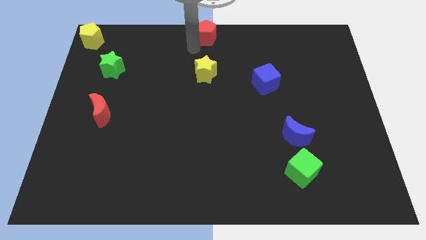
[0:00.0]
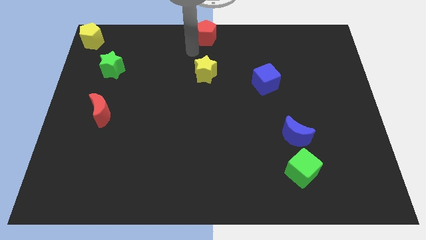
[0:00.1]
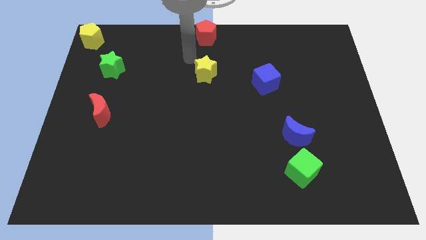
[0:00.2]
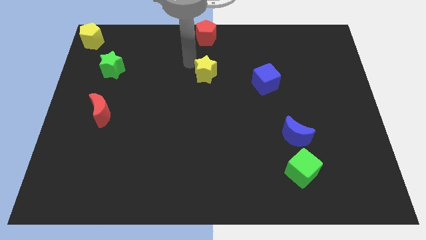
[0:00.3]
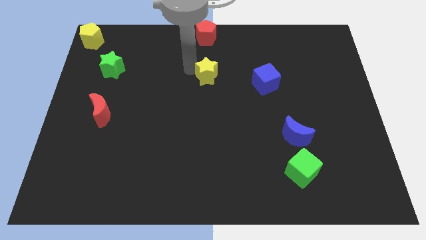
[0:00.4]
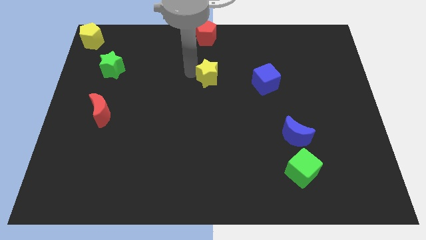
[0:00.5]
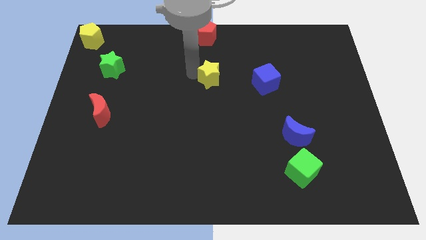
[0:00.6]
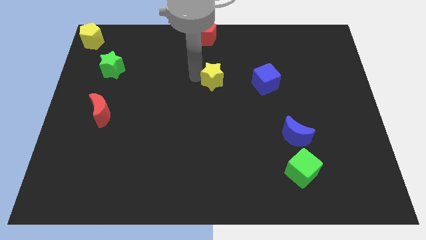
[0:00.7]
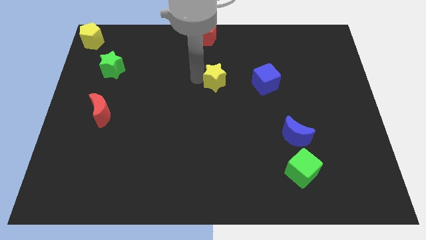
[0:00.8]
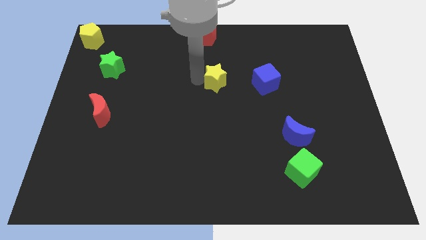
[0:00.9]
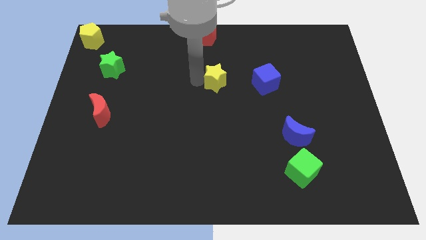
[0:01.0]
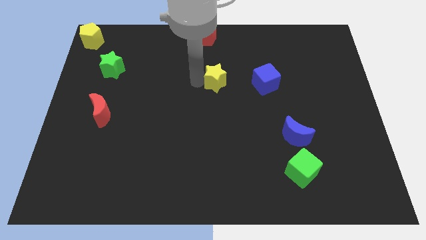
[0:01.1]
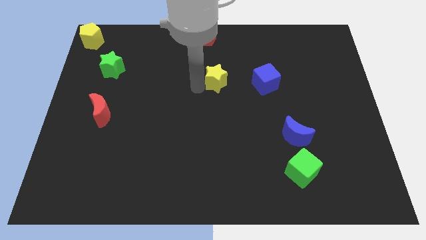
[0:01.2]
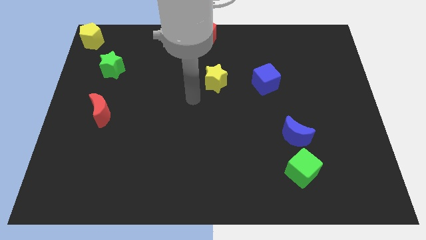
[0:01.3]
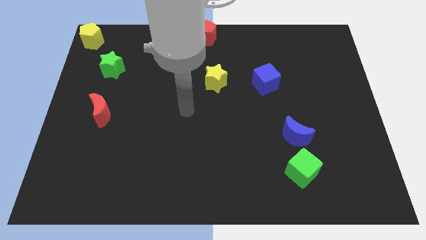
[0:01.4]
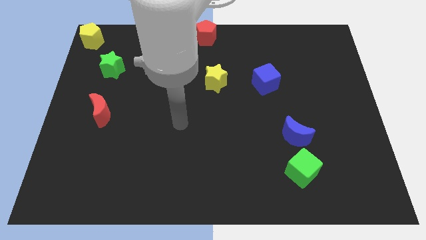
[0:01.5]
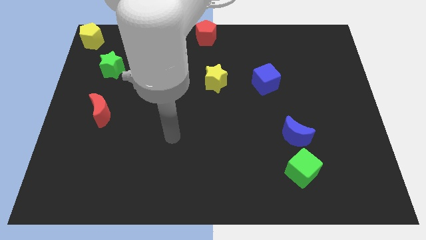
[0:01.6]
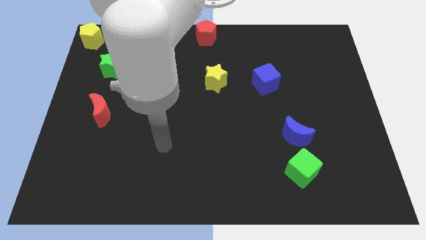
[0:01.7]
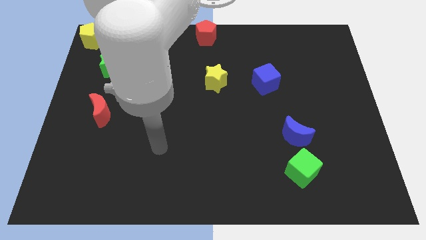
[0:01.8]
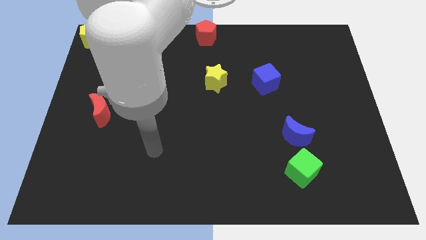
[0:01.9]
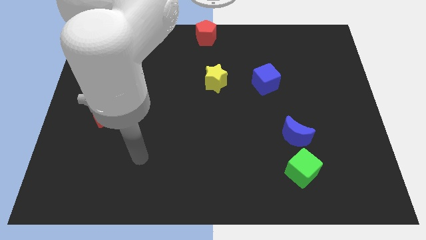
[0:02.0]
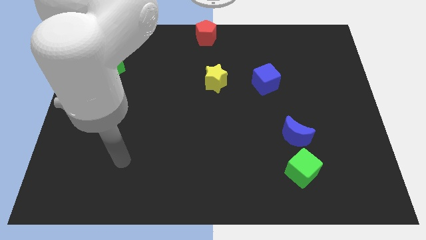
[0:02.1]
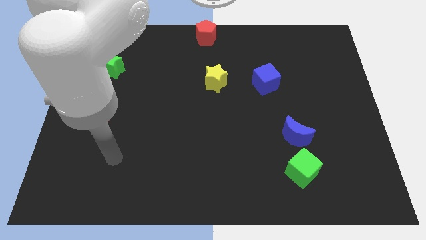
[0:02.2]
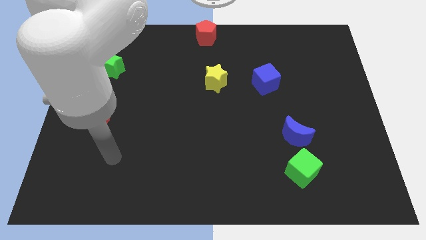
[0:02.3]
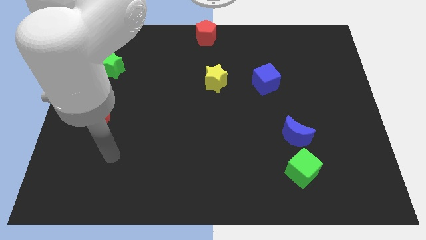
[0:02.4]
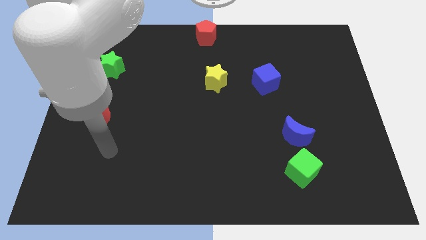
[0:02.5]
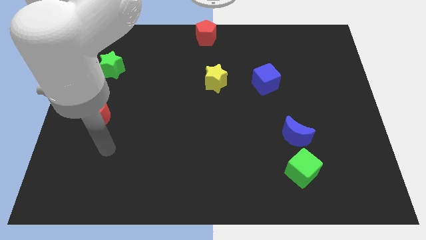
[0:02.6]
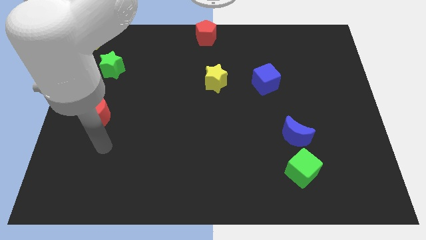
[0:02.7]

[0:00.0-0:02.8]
push the yellow star slightly to the left of the blue cube

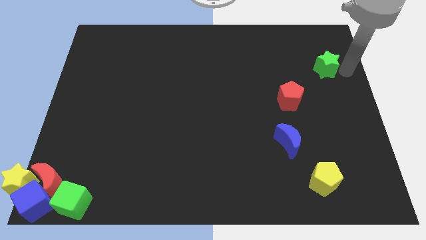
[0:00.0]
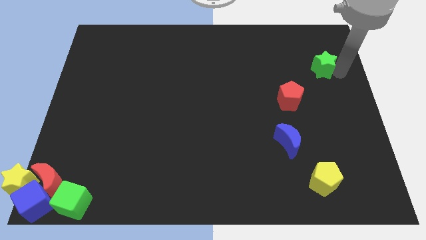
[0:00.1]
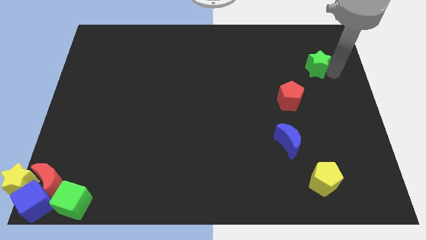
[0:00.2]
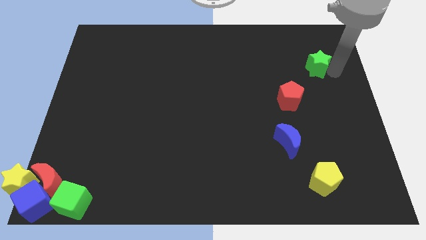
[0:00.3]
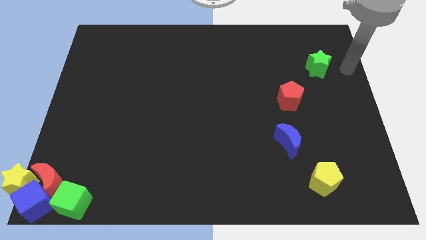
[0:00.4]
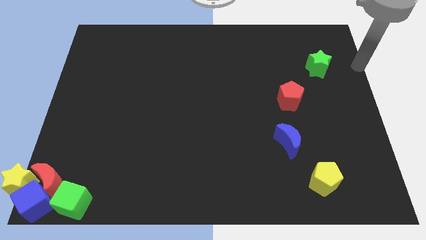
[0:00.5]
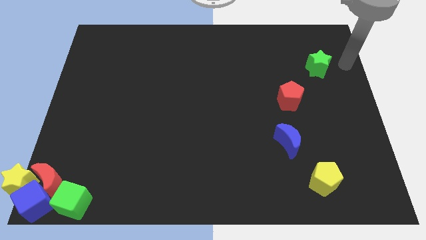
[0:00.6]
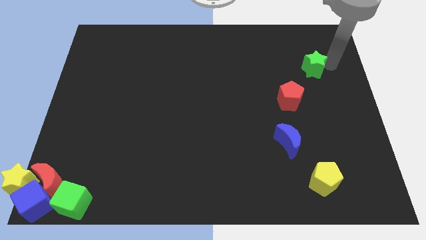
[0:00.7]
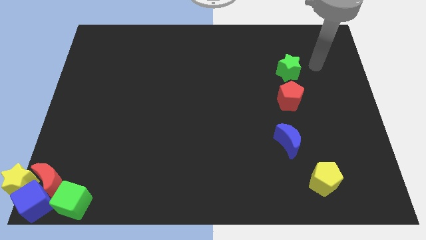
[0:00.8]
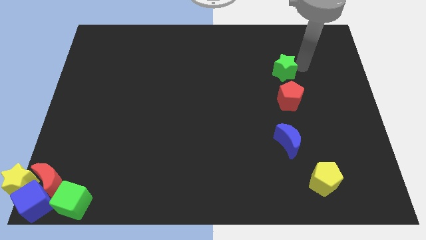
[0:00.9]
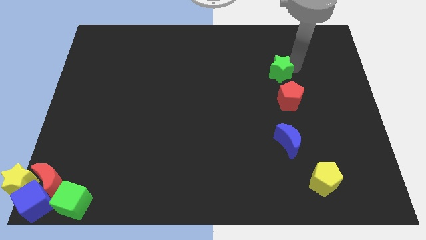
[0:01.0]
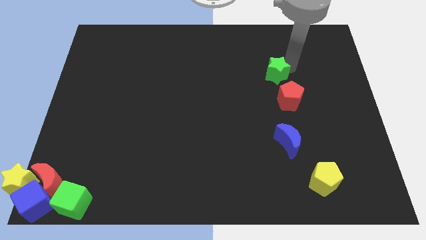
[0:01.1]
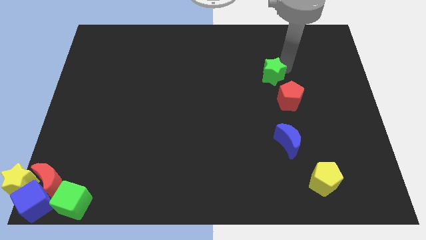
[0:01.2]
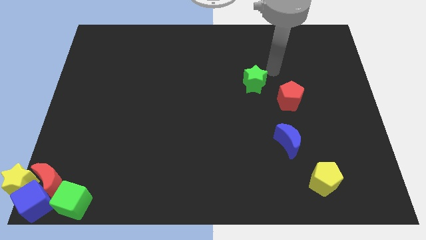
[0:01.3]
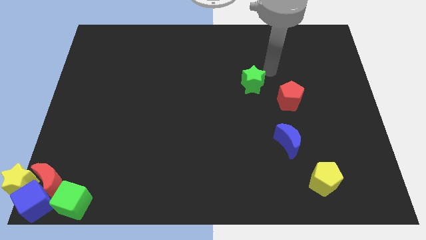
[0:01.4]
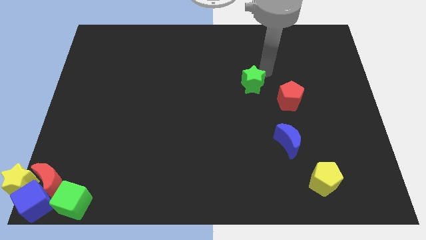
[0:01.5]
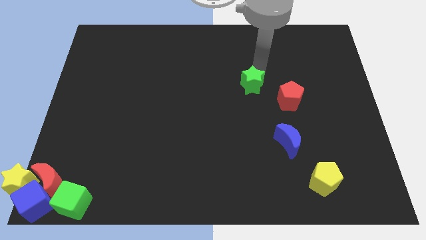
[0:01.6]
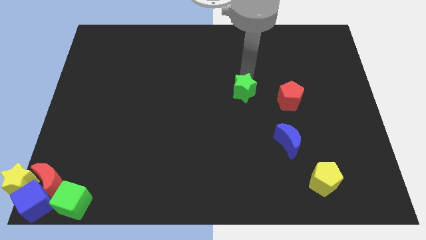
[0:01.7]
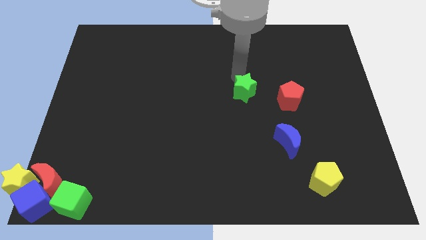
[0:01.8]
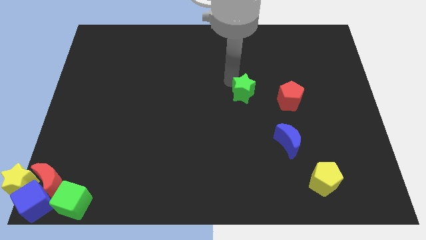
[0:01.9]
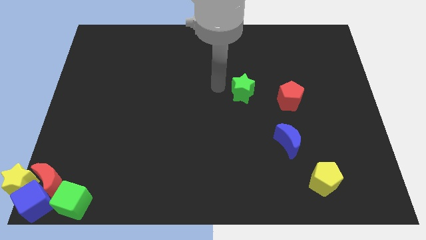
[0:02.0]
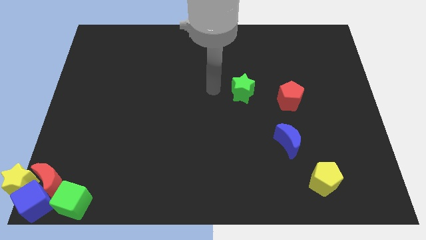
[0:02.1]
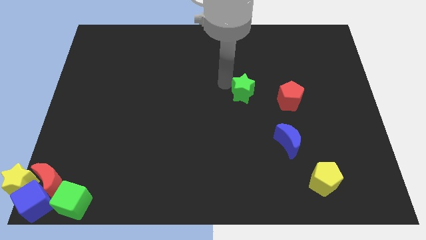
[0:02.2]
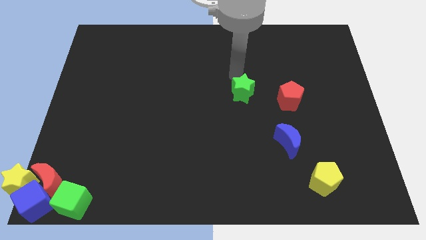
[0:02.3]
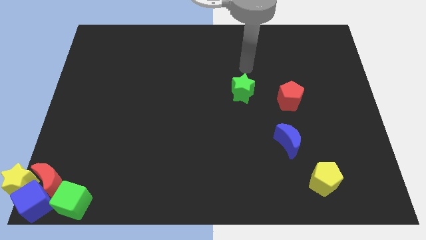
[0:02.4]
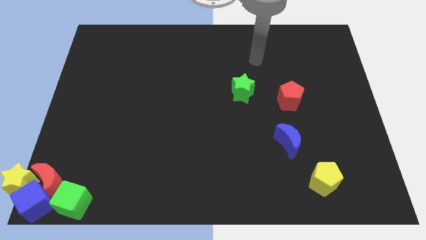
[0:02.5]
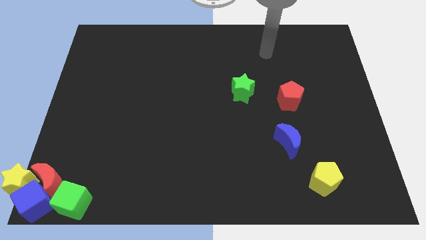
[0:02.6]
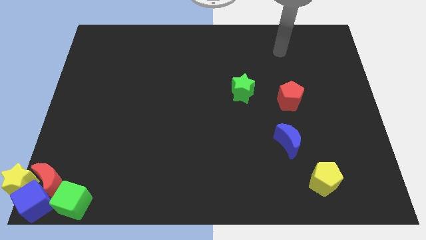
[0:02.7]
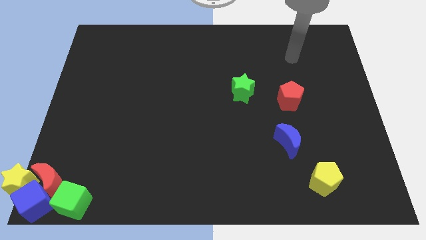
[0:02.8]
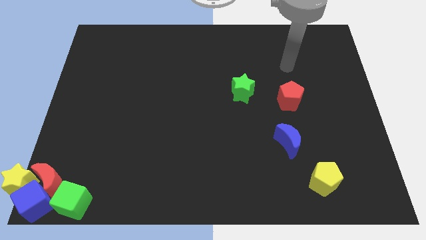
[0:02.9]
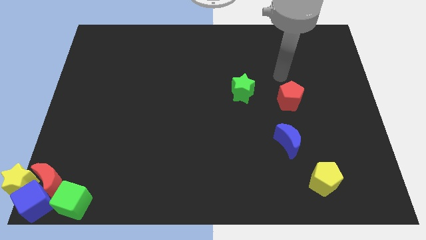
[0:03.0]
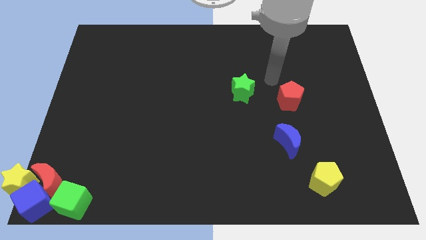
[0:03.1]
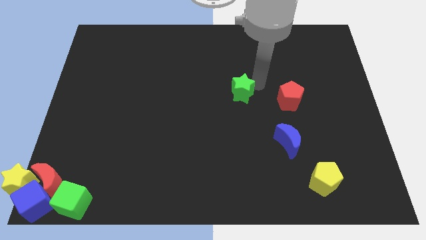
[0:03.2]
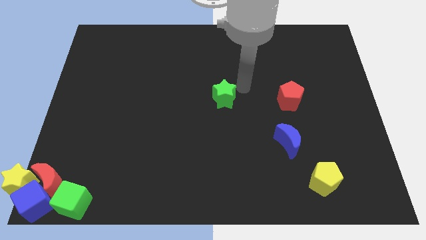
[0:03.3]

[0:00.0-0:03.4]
move the green star left to the red pentagon

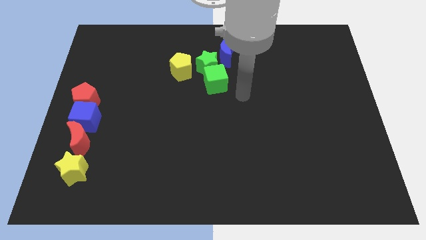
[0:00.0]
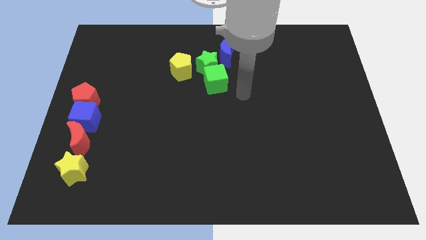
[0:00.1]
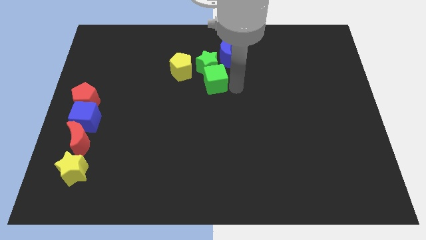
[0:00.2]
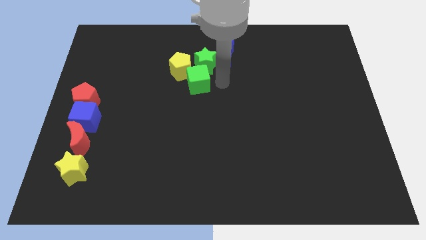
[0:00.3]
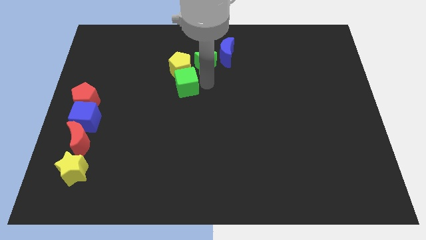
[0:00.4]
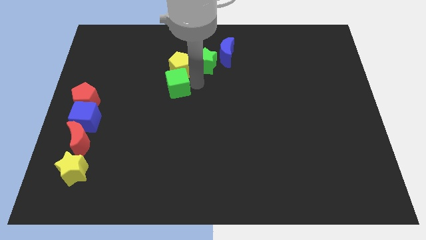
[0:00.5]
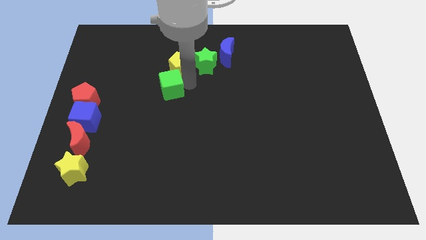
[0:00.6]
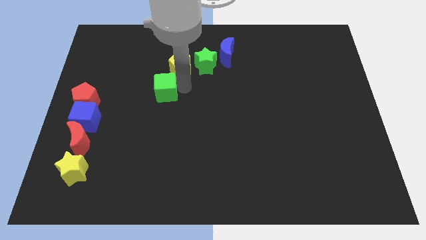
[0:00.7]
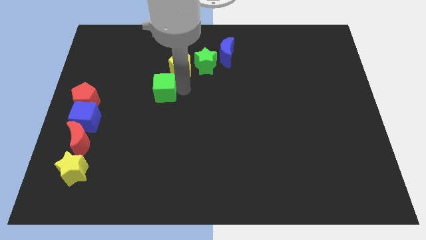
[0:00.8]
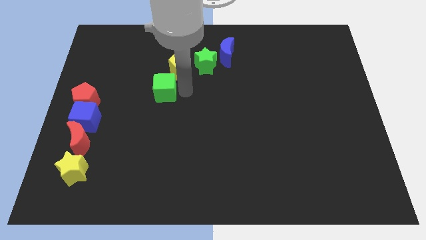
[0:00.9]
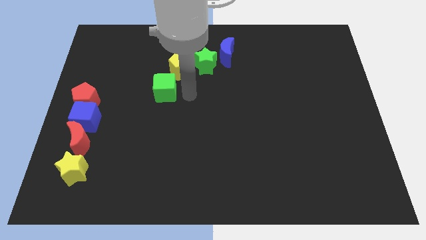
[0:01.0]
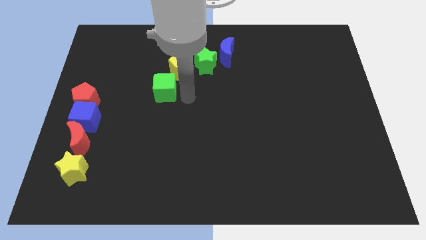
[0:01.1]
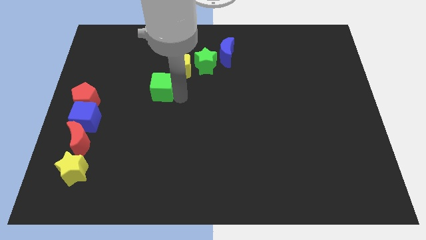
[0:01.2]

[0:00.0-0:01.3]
slide the green cube to the bottom left side of the yellow pentagon

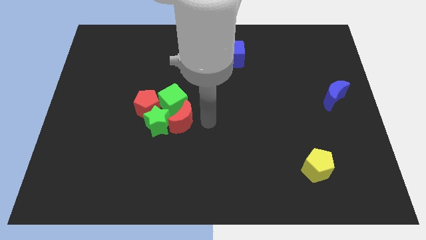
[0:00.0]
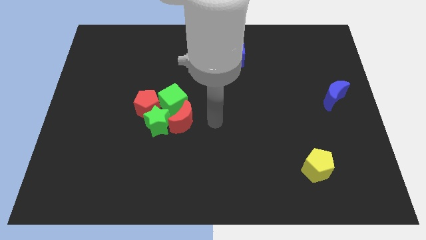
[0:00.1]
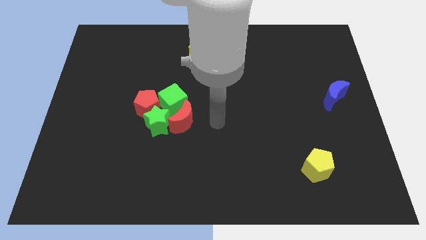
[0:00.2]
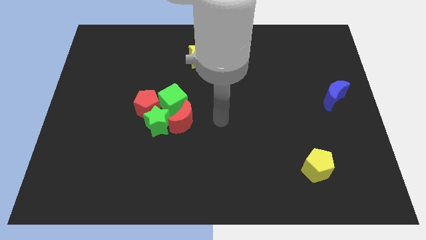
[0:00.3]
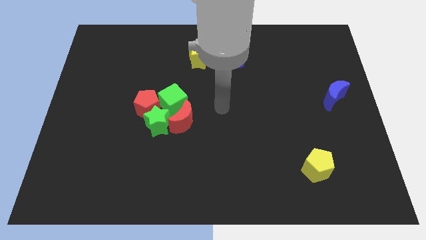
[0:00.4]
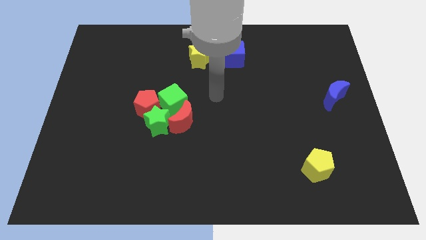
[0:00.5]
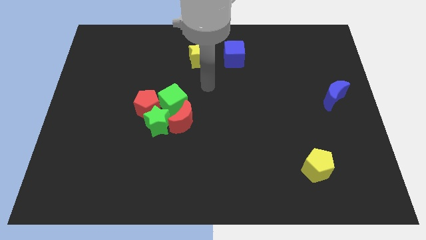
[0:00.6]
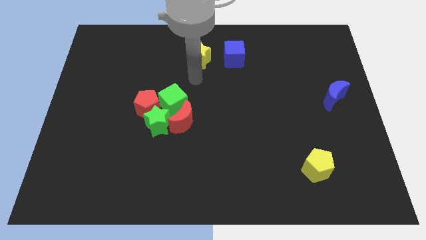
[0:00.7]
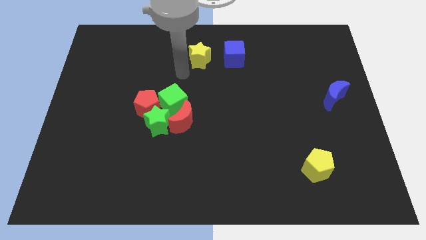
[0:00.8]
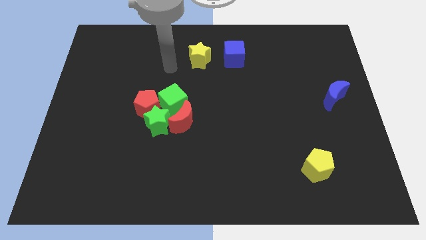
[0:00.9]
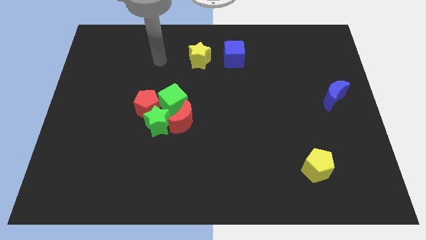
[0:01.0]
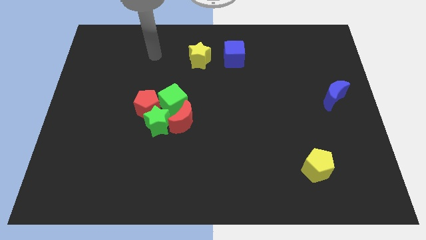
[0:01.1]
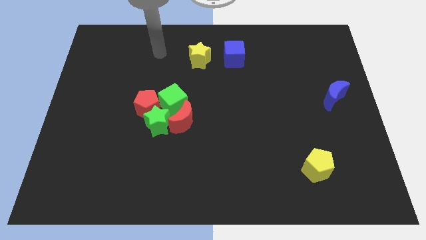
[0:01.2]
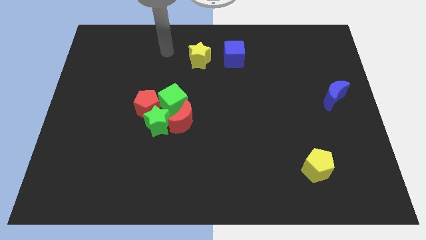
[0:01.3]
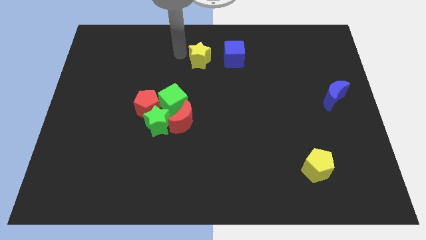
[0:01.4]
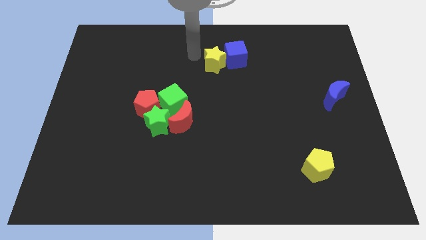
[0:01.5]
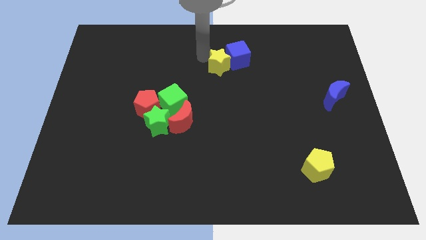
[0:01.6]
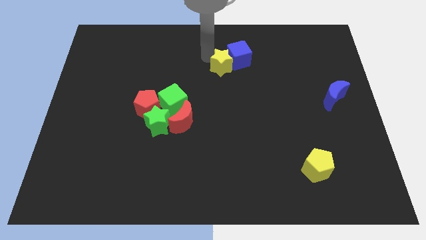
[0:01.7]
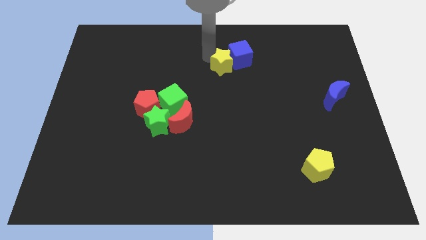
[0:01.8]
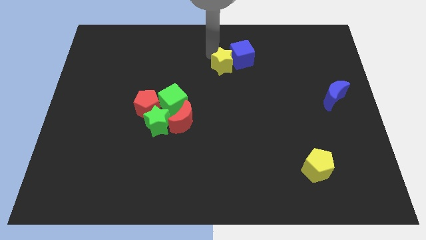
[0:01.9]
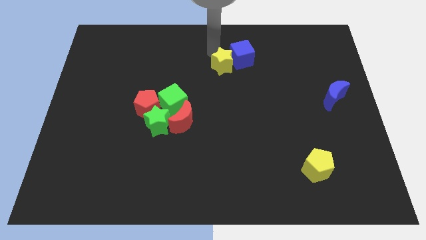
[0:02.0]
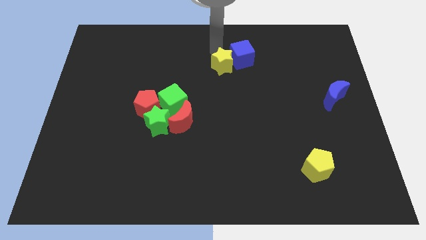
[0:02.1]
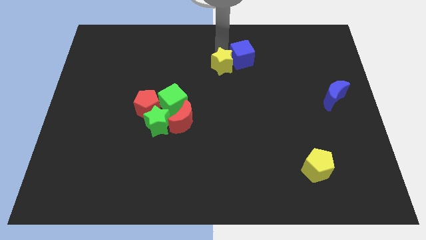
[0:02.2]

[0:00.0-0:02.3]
push the yellow star into blue cube to the left
